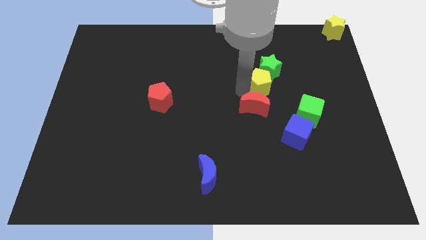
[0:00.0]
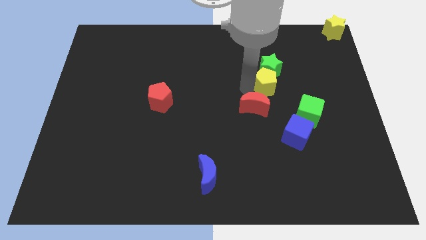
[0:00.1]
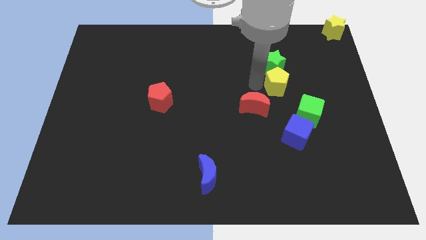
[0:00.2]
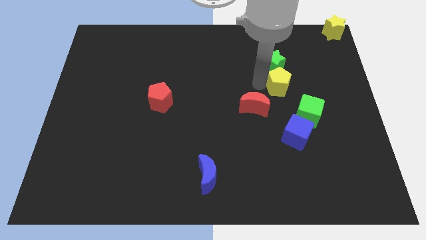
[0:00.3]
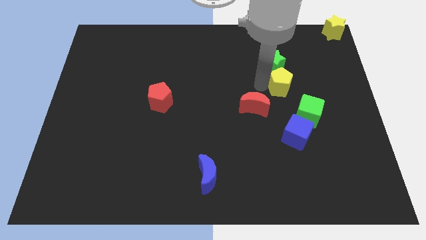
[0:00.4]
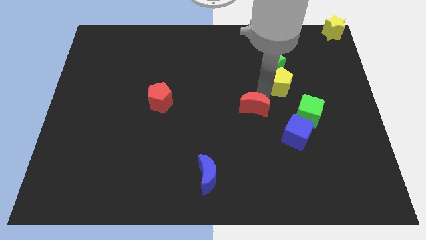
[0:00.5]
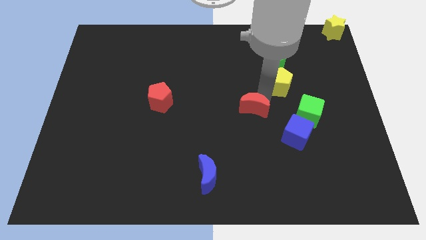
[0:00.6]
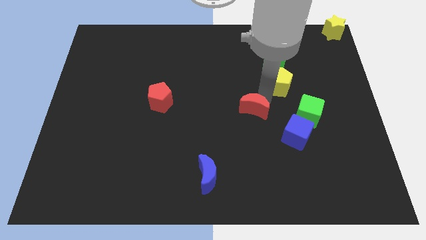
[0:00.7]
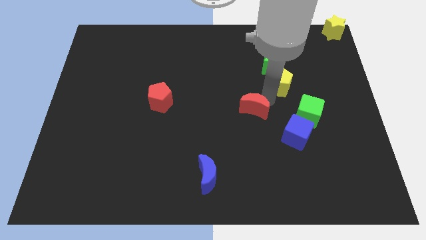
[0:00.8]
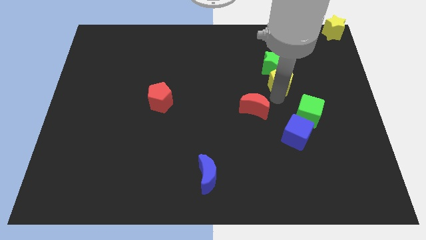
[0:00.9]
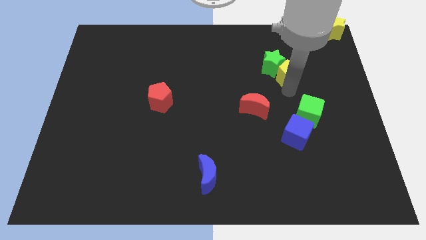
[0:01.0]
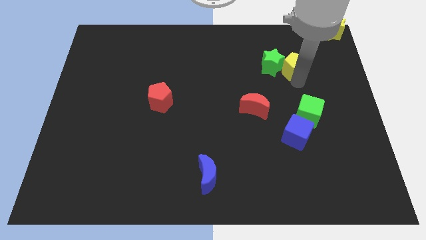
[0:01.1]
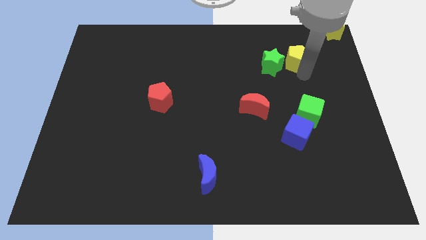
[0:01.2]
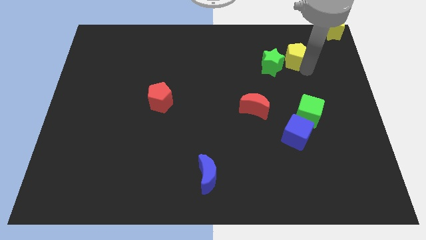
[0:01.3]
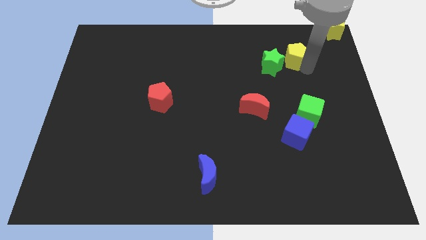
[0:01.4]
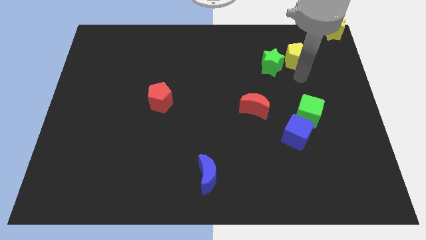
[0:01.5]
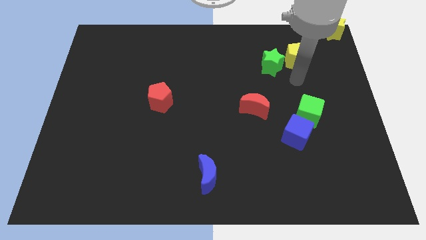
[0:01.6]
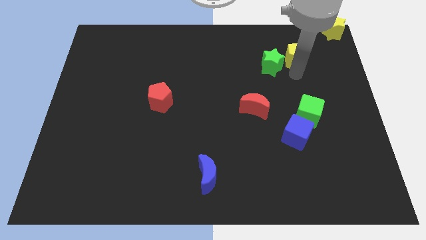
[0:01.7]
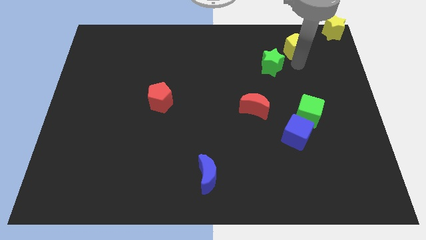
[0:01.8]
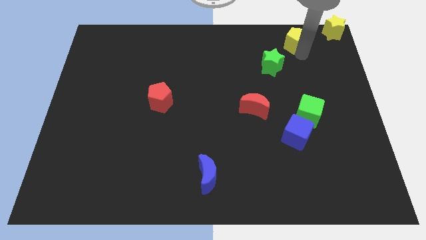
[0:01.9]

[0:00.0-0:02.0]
slide the yellow pentagon diagonally top right to the green star

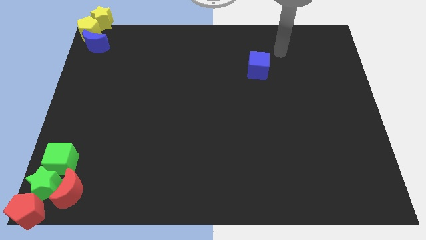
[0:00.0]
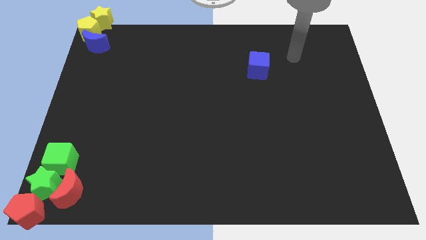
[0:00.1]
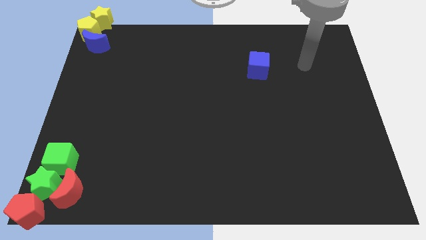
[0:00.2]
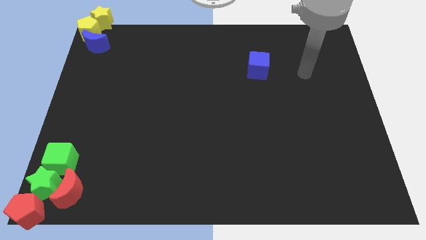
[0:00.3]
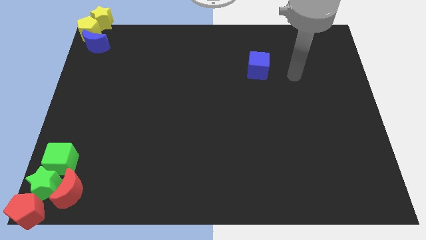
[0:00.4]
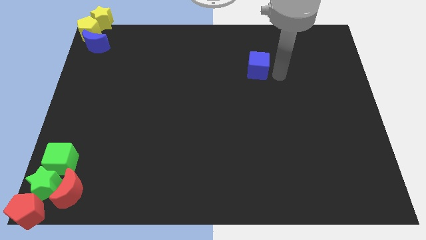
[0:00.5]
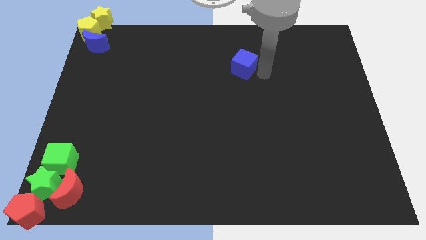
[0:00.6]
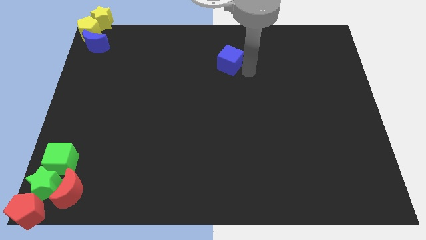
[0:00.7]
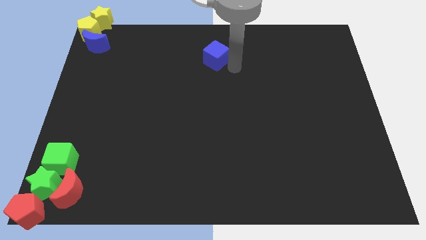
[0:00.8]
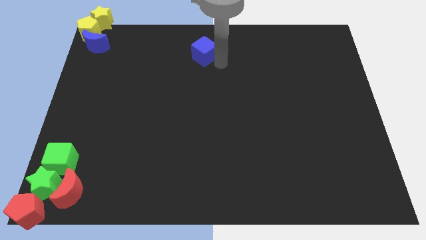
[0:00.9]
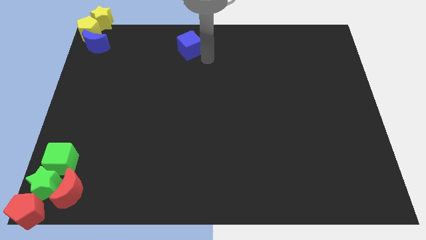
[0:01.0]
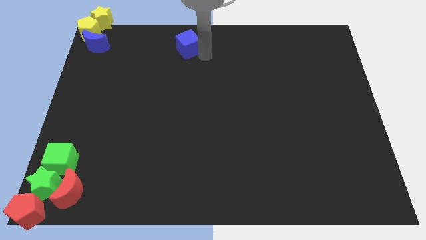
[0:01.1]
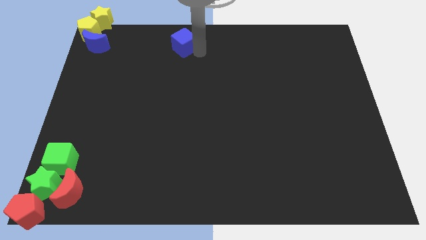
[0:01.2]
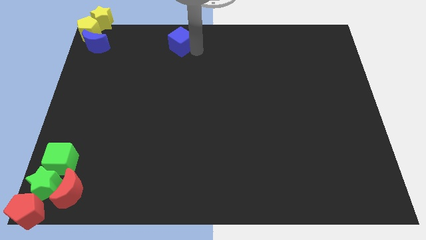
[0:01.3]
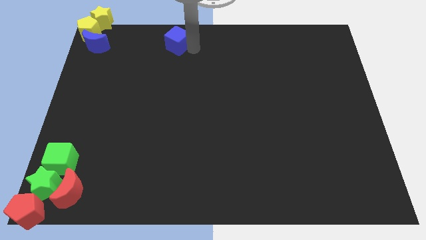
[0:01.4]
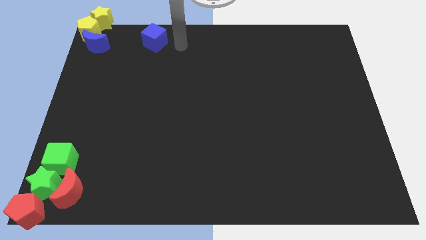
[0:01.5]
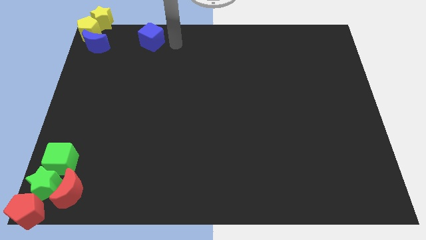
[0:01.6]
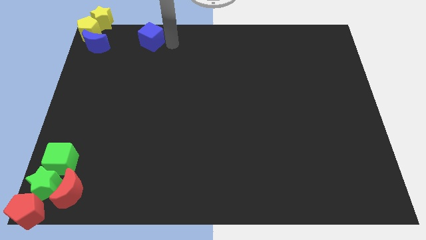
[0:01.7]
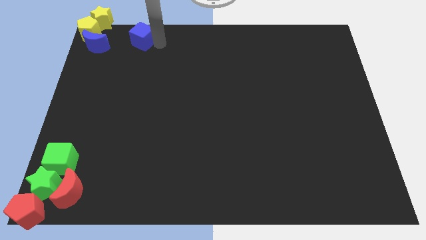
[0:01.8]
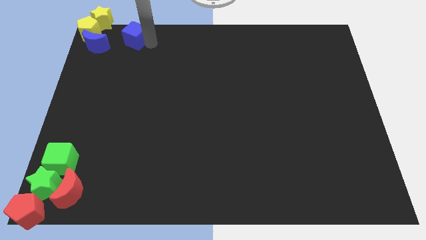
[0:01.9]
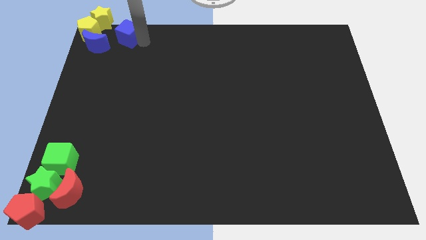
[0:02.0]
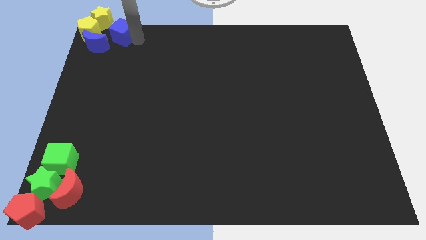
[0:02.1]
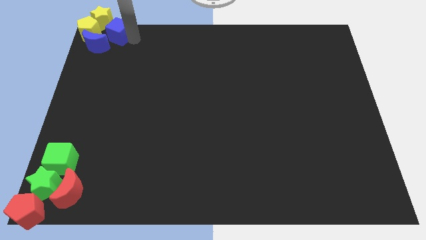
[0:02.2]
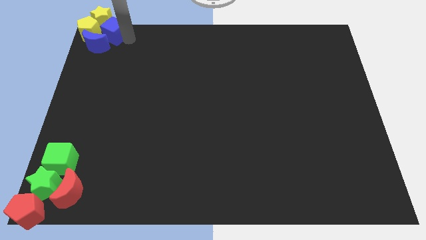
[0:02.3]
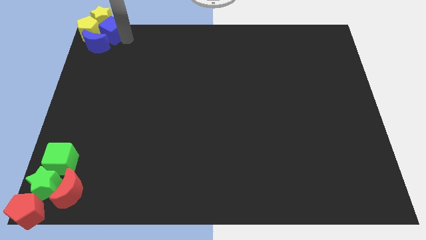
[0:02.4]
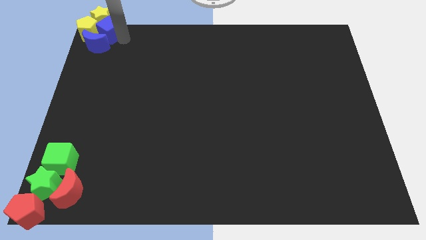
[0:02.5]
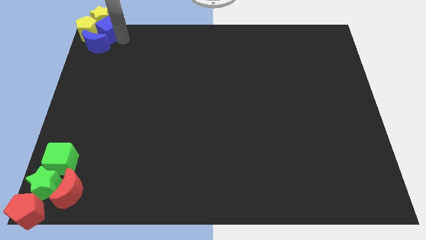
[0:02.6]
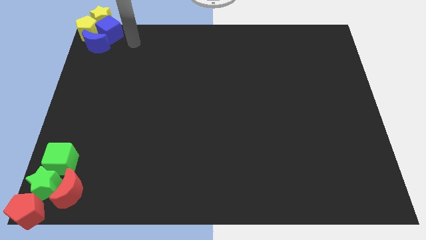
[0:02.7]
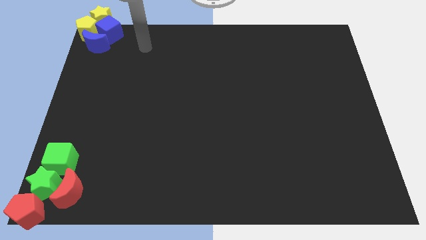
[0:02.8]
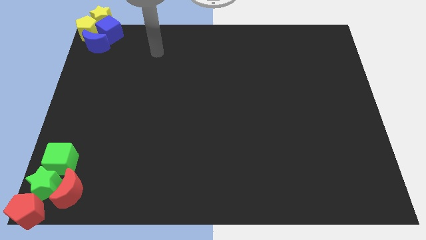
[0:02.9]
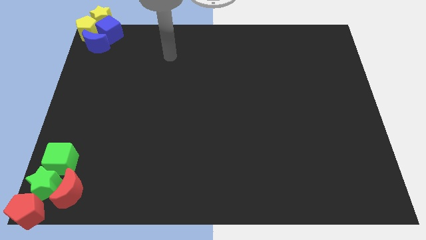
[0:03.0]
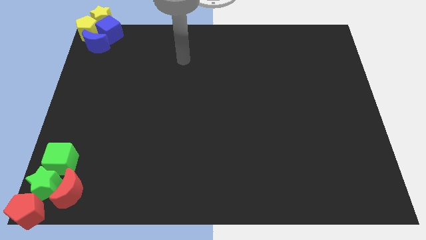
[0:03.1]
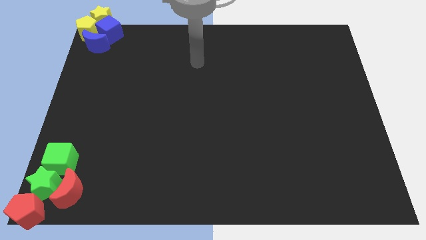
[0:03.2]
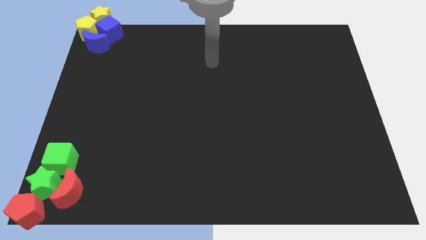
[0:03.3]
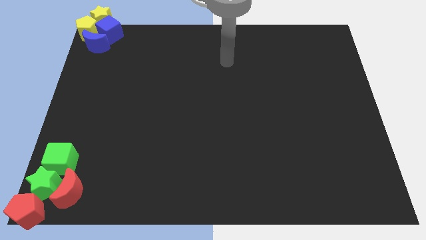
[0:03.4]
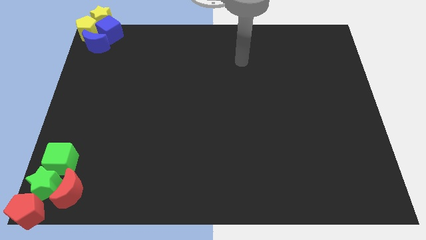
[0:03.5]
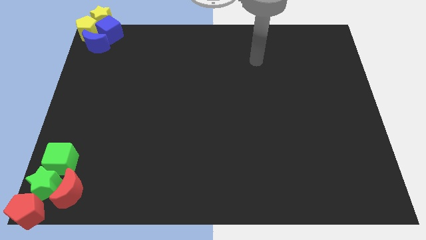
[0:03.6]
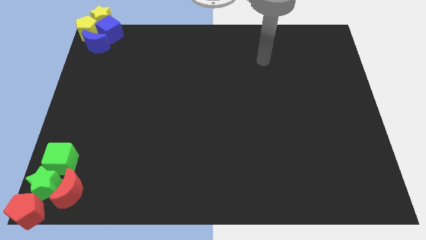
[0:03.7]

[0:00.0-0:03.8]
push the blue cube into the yellow blocks which are at the top left corner of the board

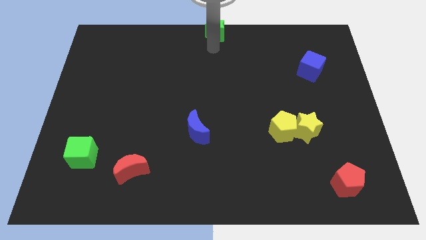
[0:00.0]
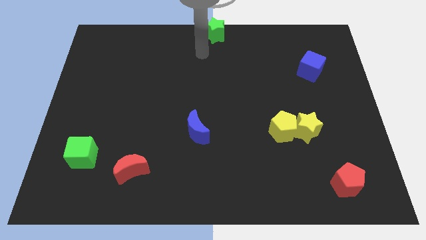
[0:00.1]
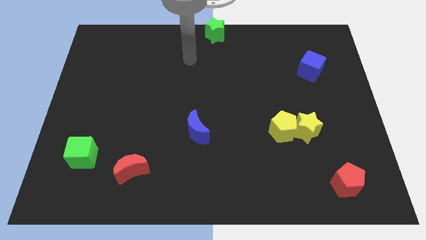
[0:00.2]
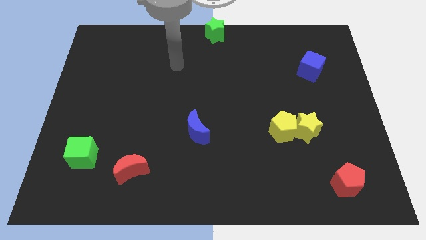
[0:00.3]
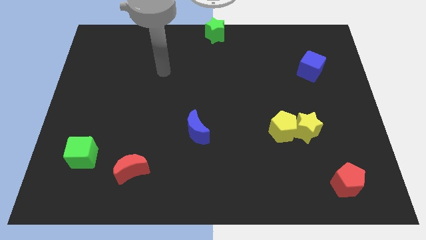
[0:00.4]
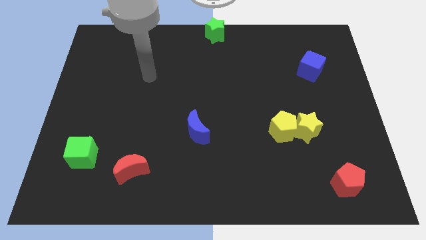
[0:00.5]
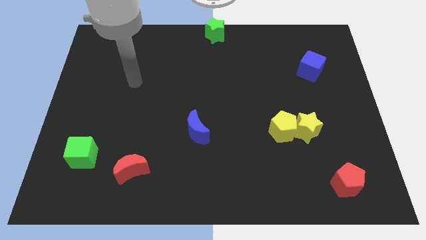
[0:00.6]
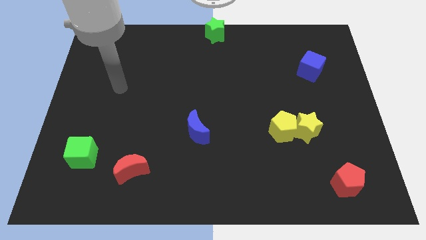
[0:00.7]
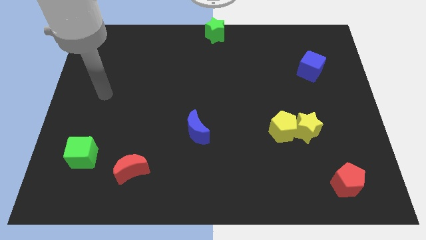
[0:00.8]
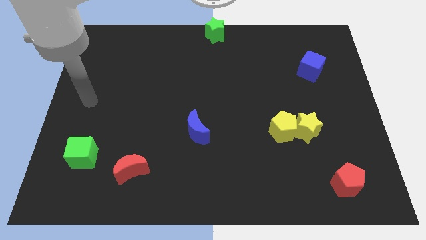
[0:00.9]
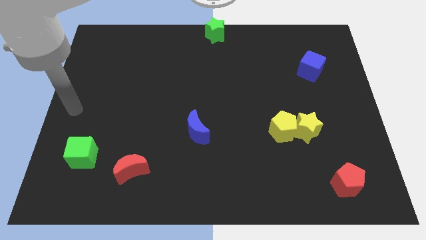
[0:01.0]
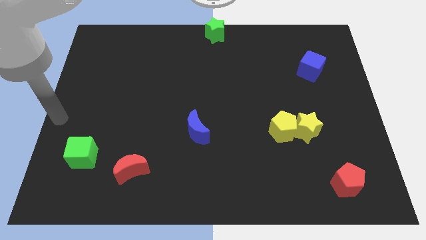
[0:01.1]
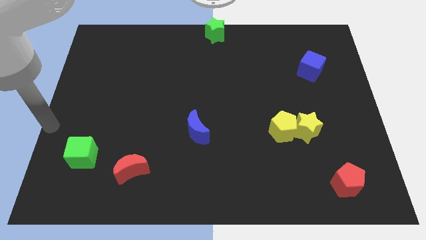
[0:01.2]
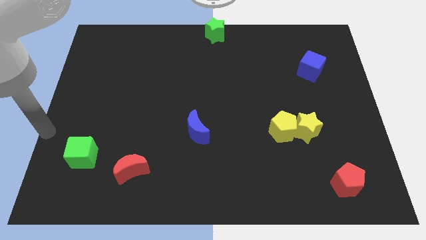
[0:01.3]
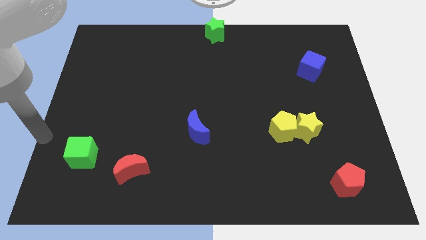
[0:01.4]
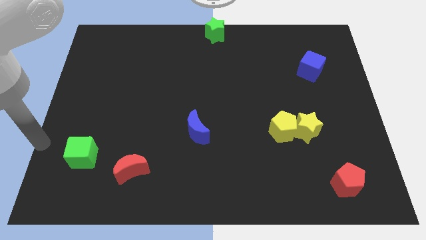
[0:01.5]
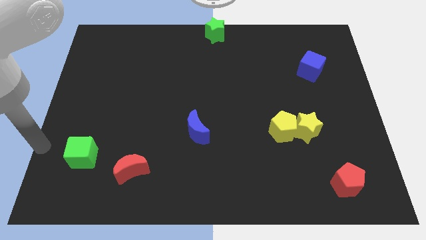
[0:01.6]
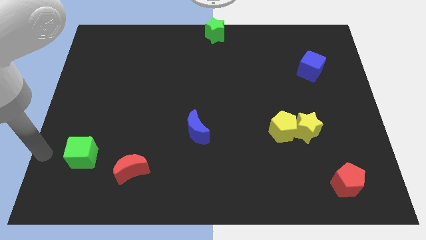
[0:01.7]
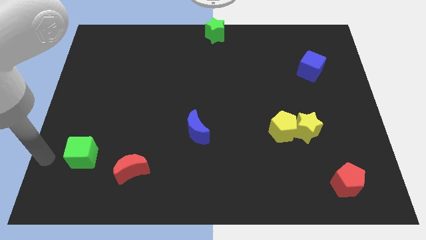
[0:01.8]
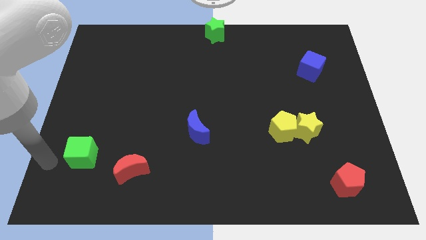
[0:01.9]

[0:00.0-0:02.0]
place your arm to the left of green cube

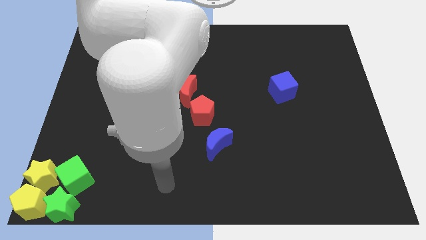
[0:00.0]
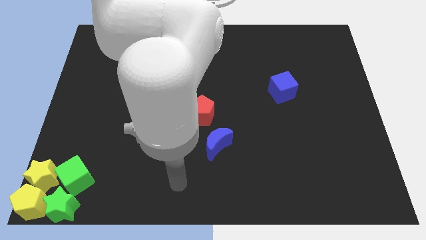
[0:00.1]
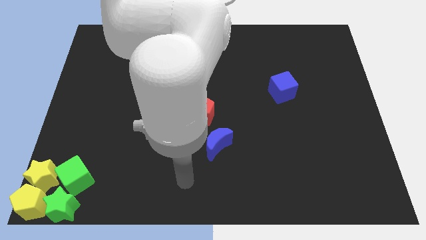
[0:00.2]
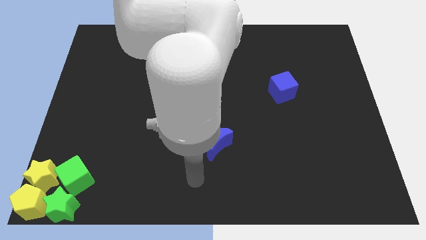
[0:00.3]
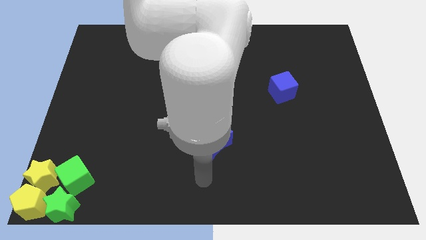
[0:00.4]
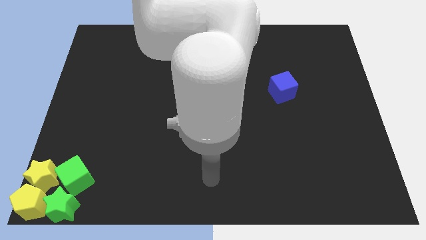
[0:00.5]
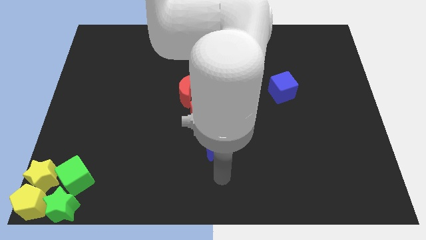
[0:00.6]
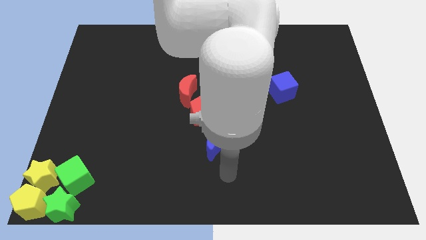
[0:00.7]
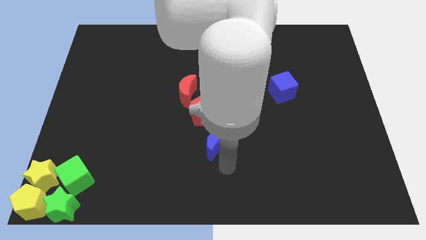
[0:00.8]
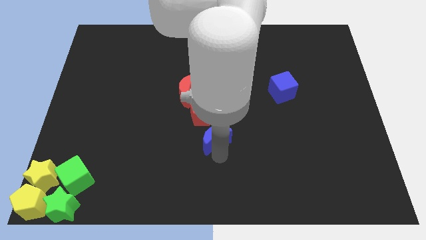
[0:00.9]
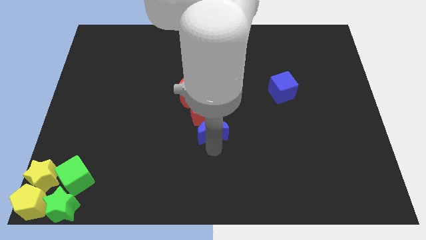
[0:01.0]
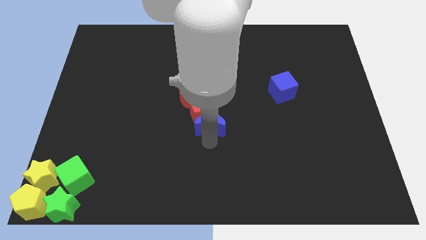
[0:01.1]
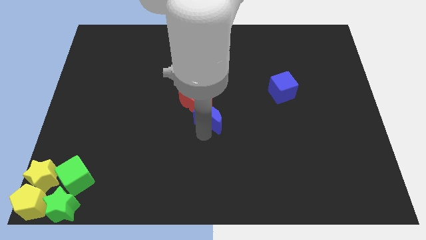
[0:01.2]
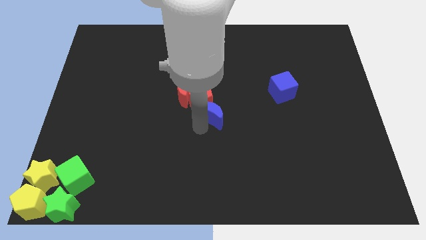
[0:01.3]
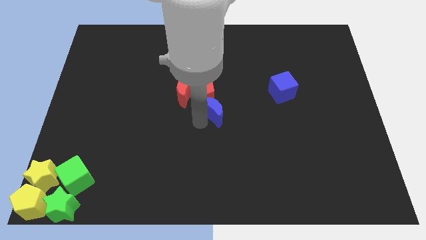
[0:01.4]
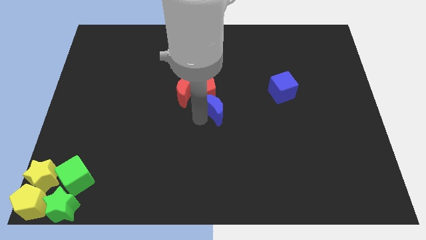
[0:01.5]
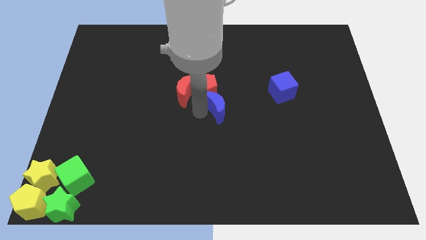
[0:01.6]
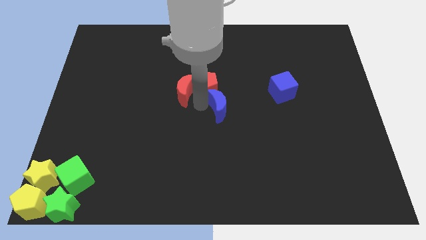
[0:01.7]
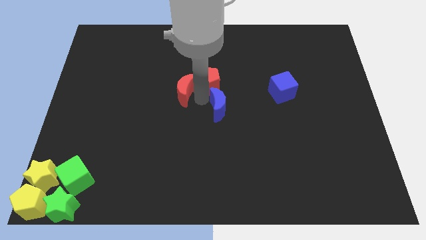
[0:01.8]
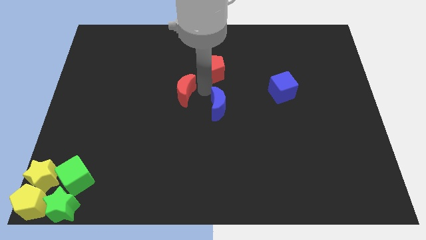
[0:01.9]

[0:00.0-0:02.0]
push the blue crescent towards the center of the board
